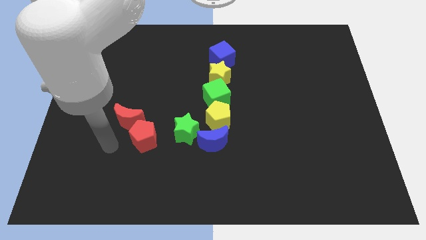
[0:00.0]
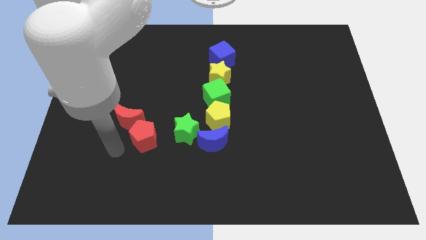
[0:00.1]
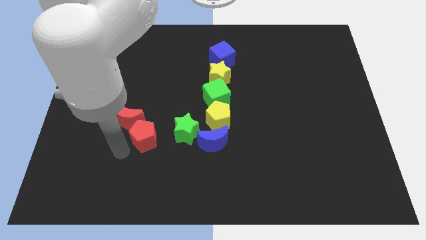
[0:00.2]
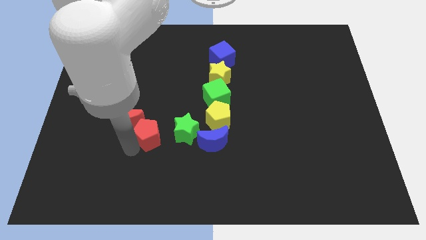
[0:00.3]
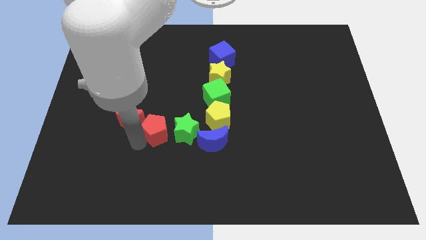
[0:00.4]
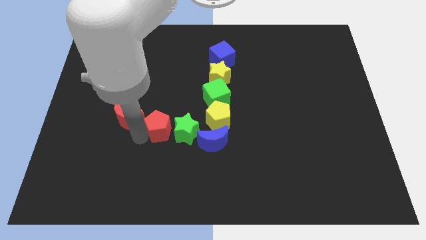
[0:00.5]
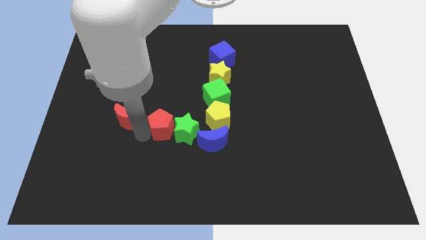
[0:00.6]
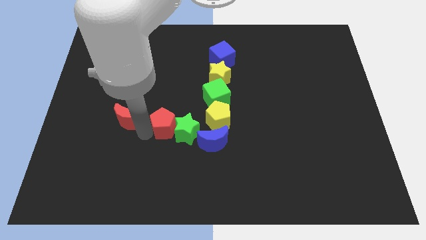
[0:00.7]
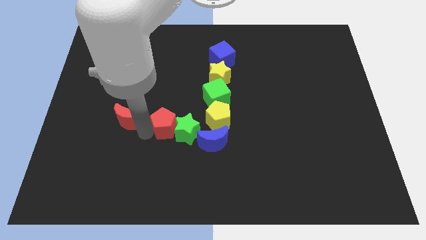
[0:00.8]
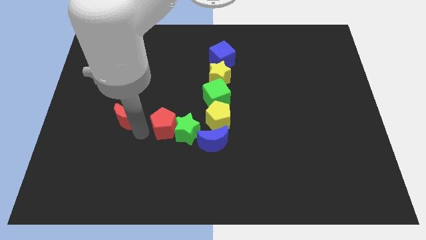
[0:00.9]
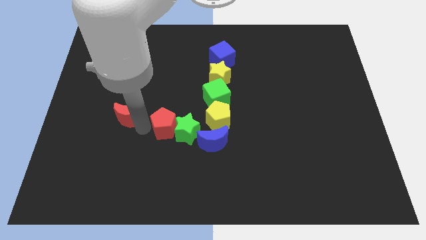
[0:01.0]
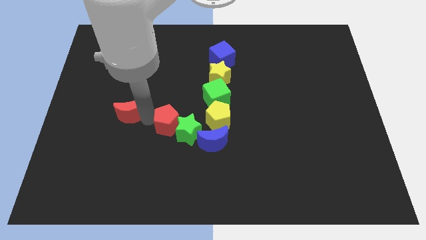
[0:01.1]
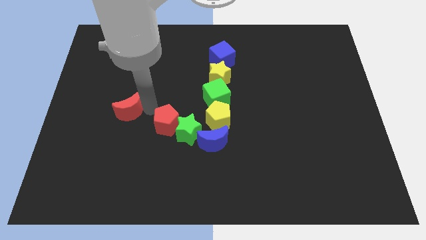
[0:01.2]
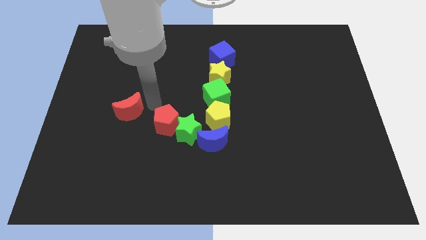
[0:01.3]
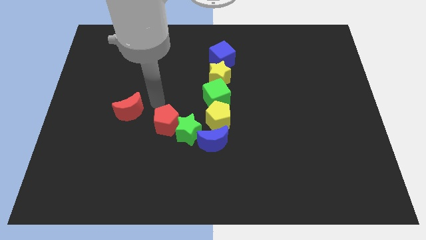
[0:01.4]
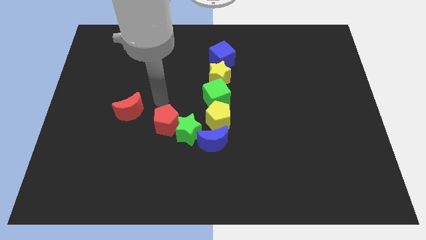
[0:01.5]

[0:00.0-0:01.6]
move the red pentagon into the green star

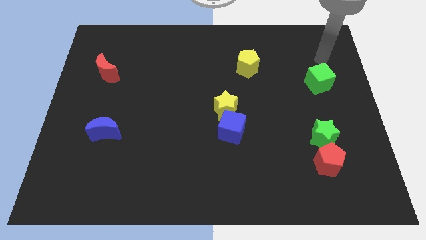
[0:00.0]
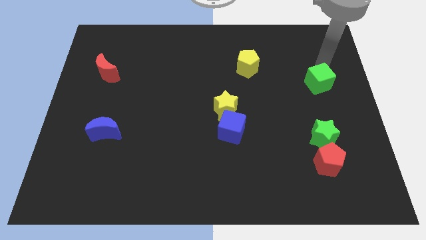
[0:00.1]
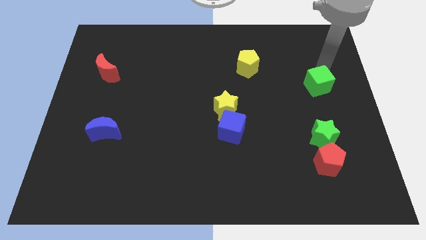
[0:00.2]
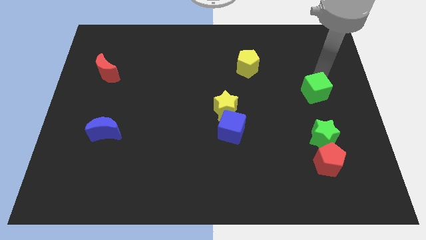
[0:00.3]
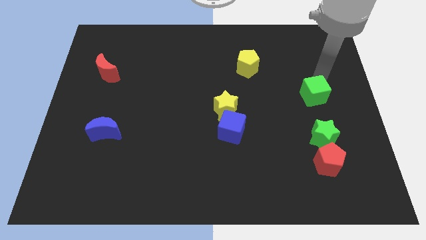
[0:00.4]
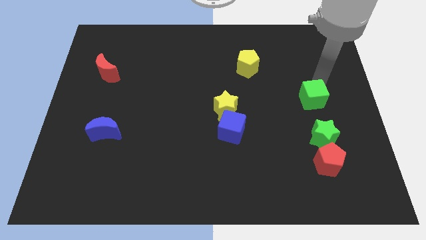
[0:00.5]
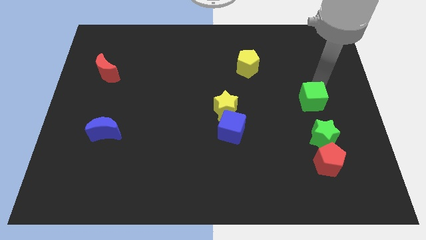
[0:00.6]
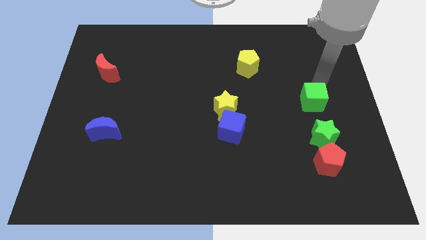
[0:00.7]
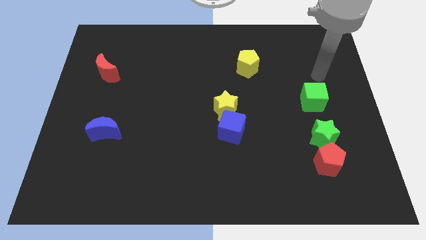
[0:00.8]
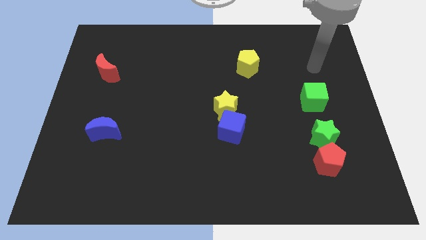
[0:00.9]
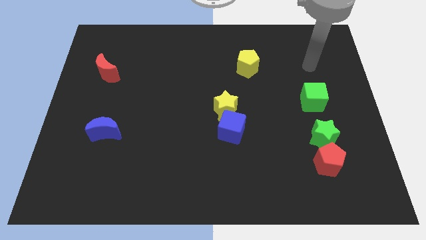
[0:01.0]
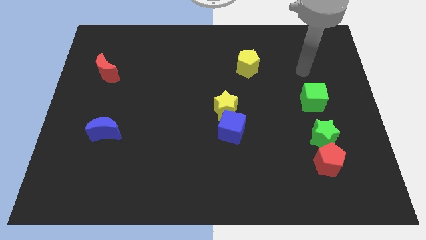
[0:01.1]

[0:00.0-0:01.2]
move the green cube towards green star

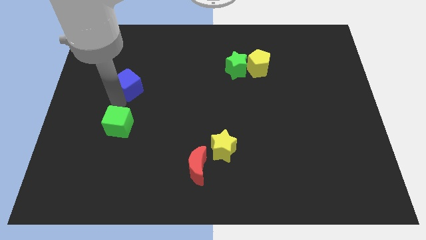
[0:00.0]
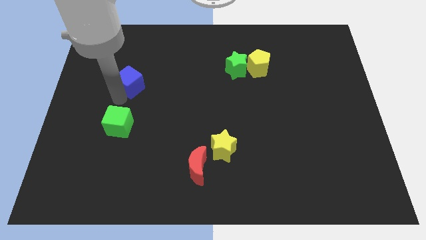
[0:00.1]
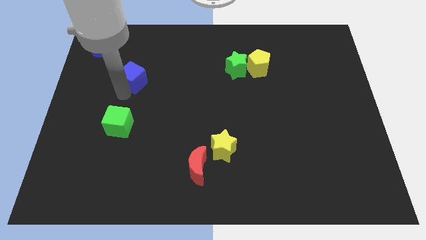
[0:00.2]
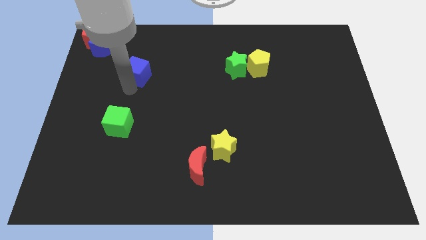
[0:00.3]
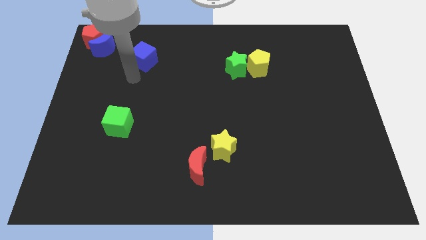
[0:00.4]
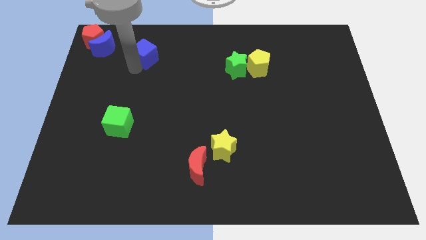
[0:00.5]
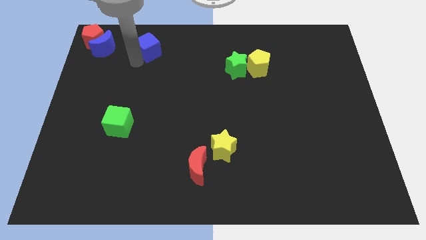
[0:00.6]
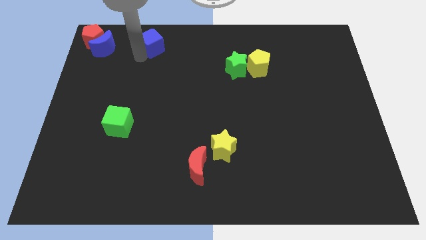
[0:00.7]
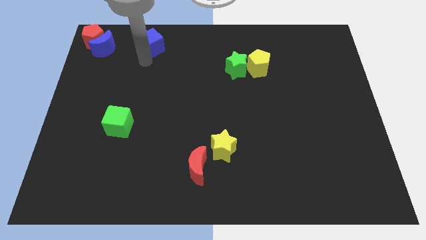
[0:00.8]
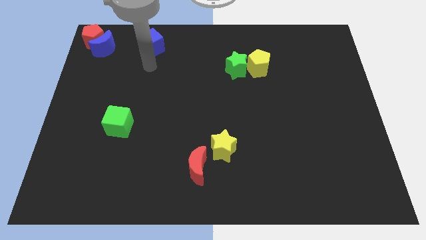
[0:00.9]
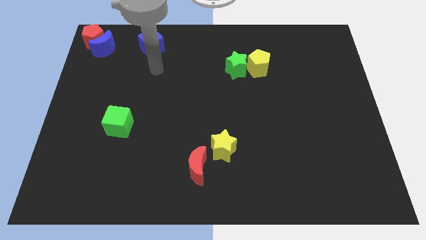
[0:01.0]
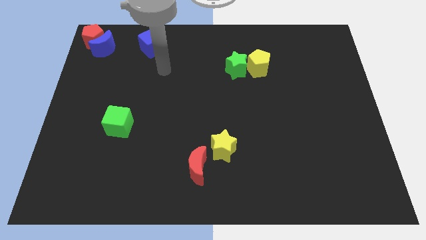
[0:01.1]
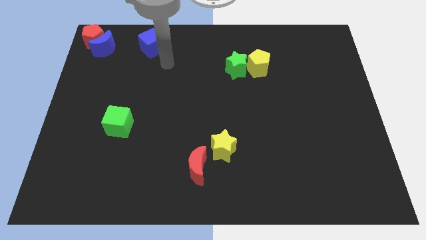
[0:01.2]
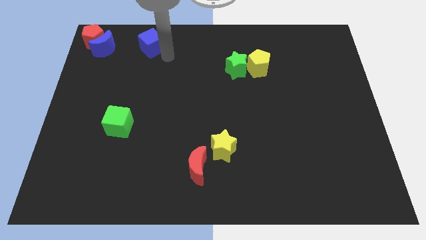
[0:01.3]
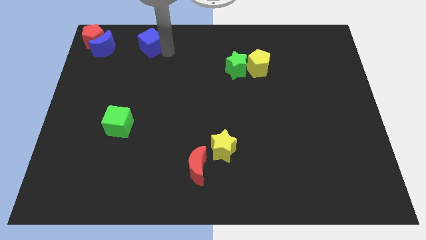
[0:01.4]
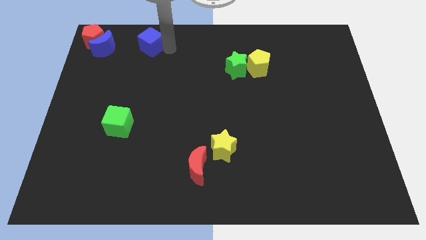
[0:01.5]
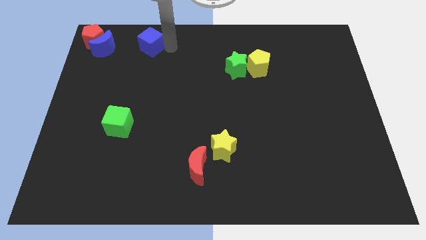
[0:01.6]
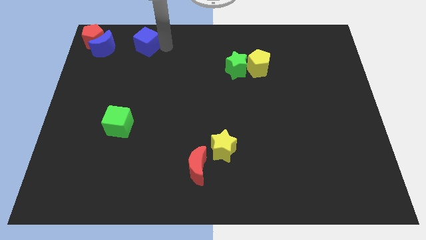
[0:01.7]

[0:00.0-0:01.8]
slide the blue cube to the top side

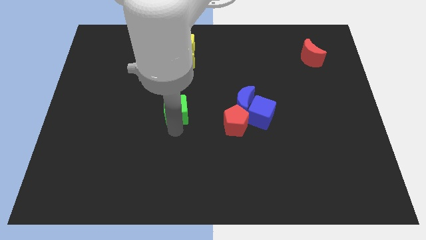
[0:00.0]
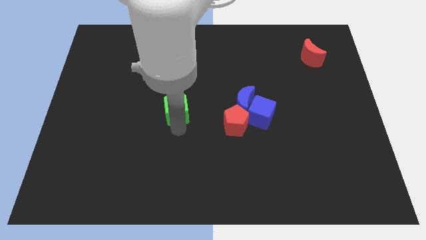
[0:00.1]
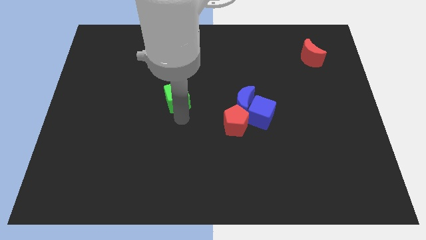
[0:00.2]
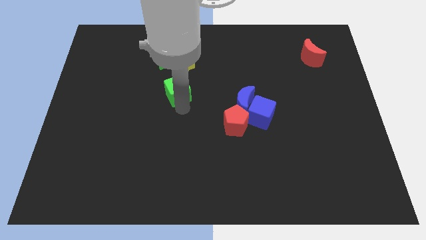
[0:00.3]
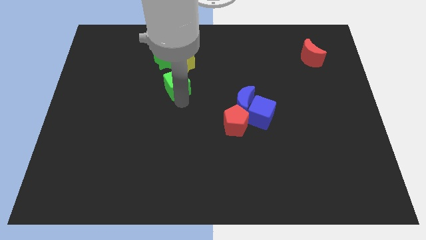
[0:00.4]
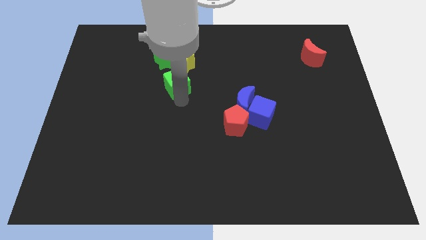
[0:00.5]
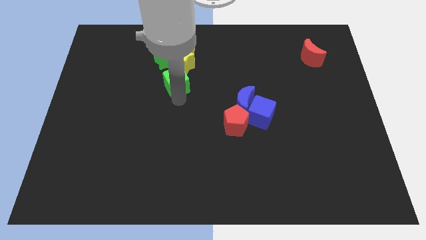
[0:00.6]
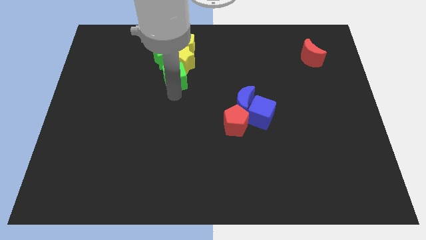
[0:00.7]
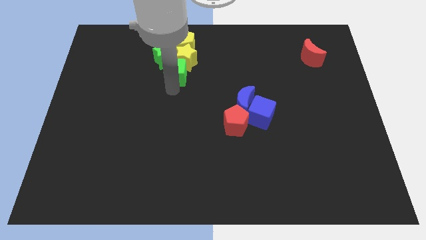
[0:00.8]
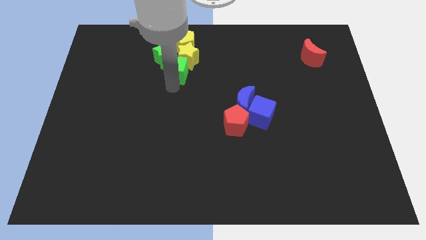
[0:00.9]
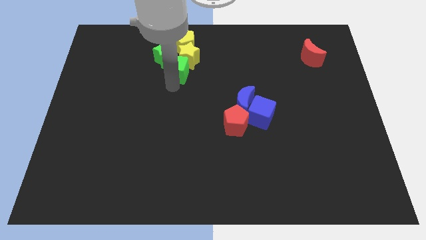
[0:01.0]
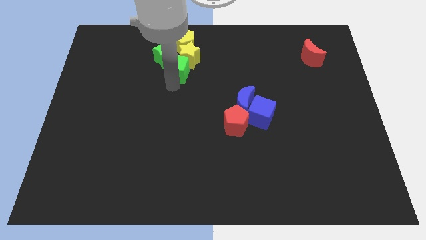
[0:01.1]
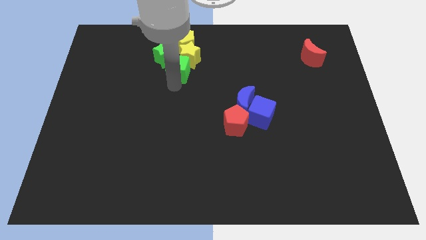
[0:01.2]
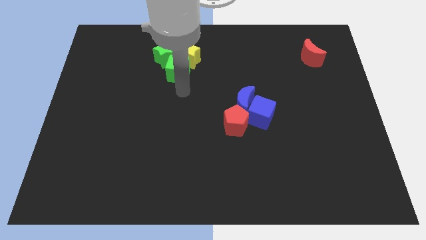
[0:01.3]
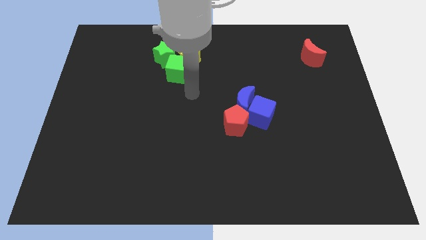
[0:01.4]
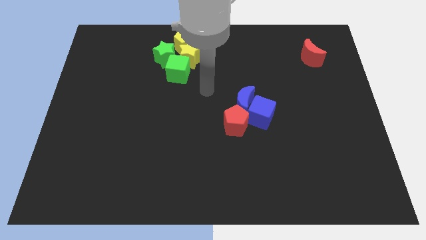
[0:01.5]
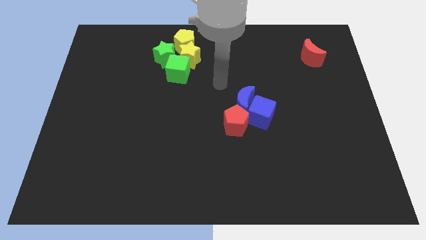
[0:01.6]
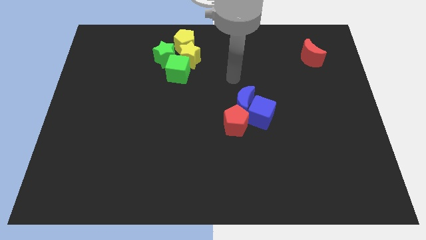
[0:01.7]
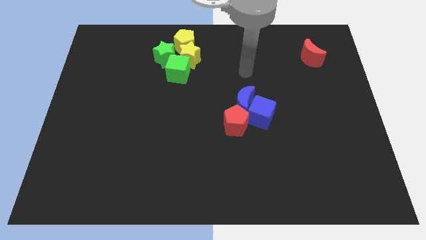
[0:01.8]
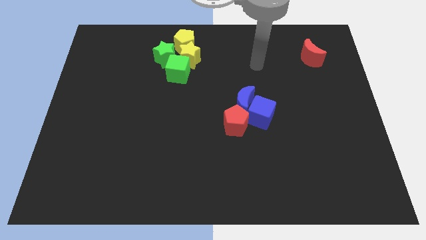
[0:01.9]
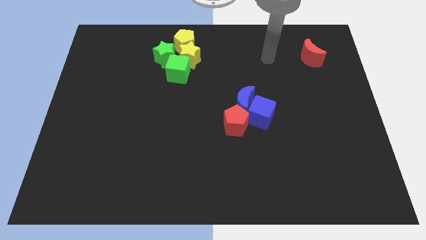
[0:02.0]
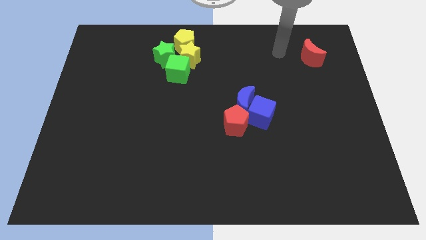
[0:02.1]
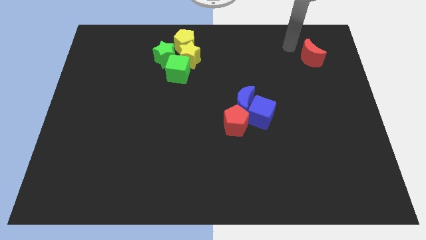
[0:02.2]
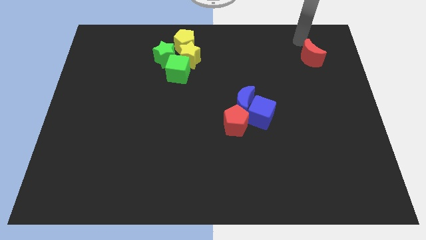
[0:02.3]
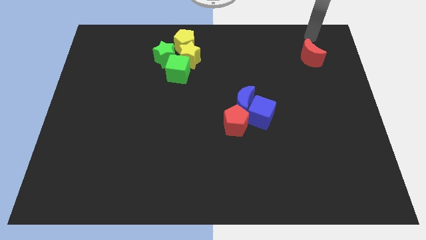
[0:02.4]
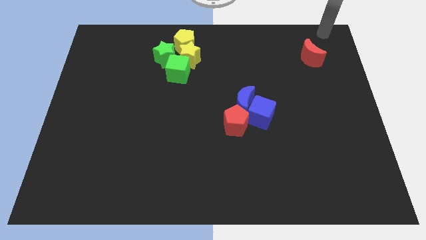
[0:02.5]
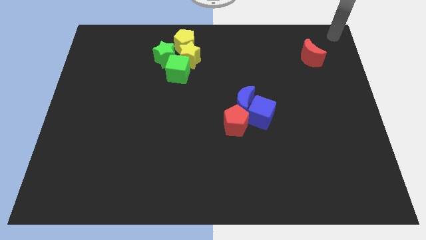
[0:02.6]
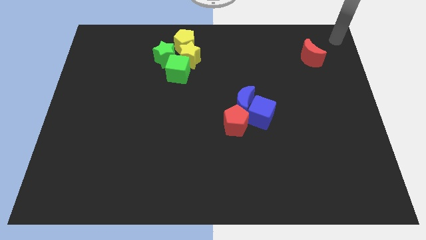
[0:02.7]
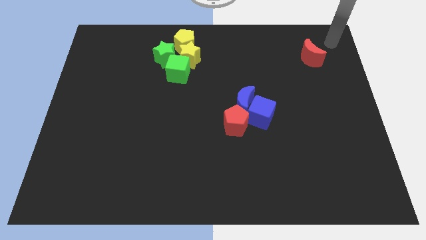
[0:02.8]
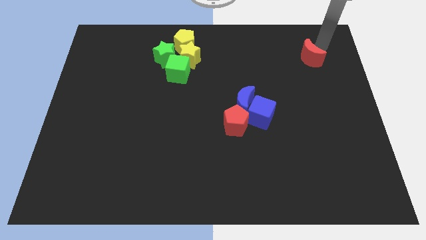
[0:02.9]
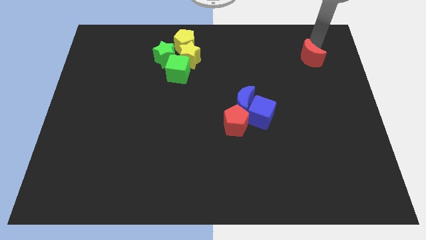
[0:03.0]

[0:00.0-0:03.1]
move green cube into yellow star

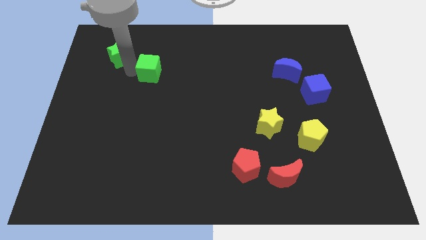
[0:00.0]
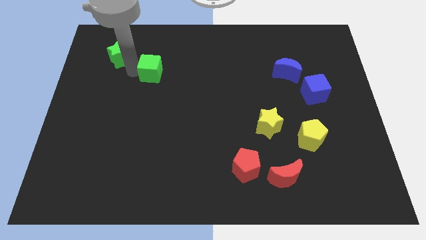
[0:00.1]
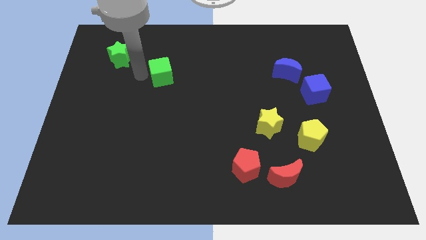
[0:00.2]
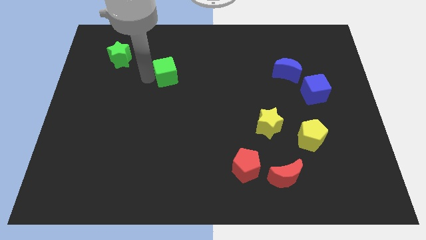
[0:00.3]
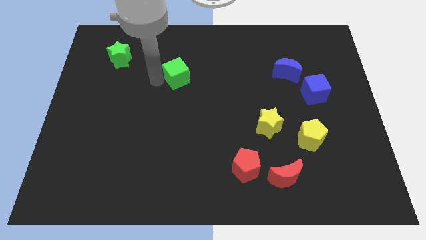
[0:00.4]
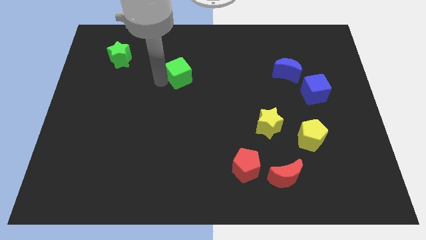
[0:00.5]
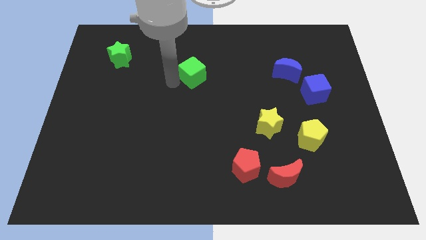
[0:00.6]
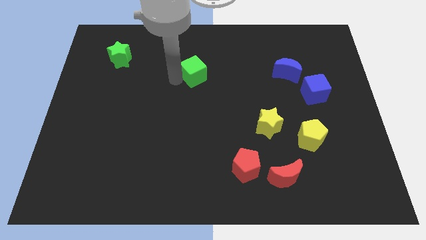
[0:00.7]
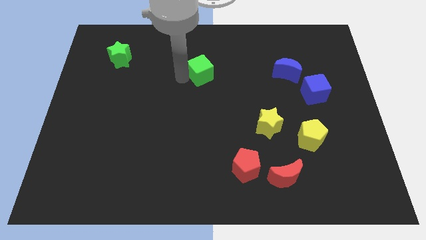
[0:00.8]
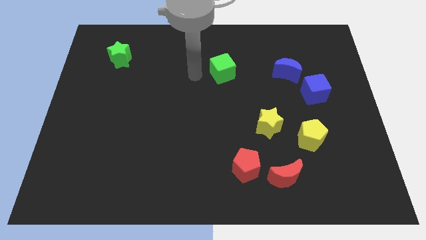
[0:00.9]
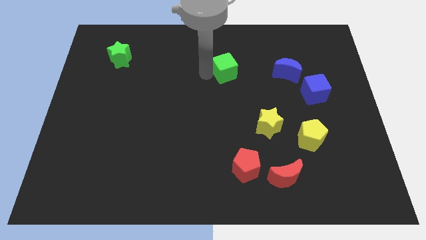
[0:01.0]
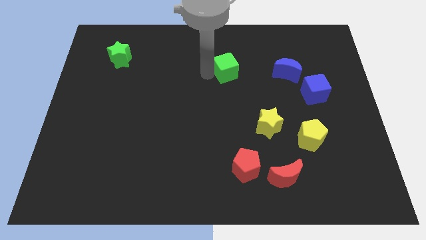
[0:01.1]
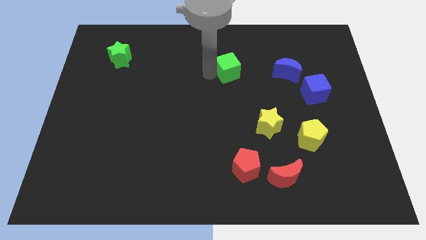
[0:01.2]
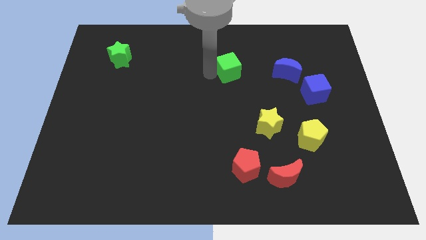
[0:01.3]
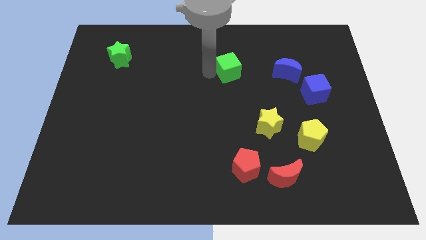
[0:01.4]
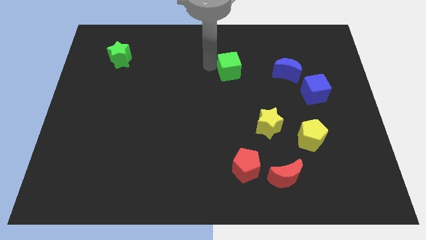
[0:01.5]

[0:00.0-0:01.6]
push the green cube closer to the blue moon
